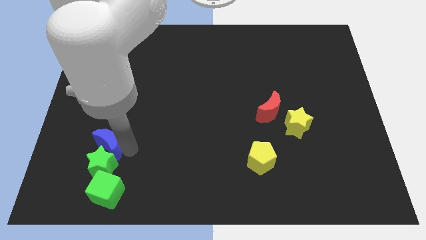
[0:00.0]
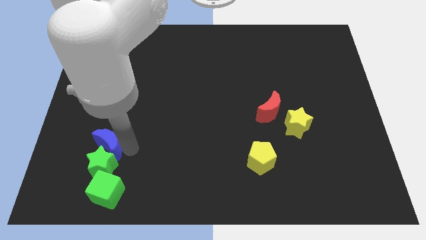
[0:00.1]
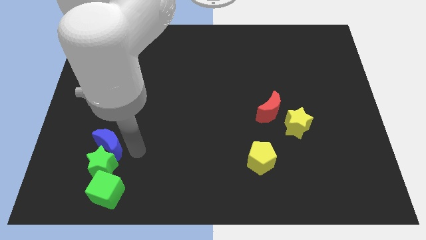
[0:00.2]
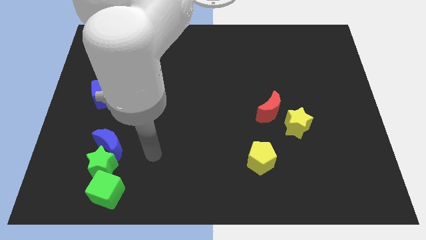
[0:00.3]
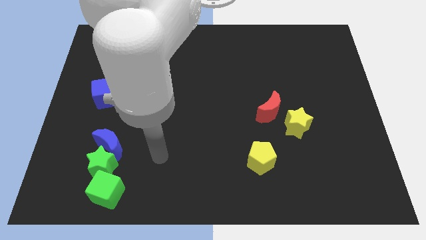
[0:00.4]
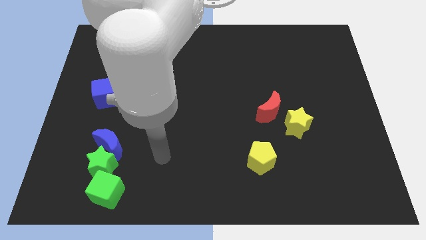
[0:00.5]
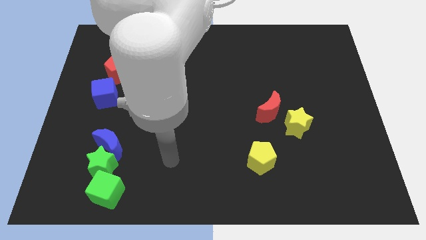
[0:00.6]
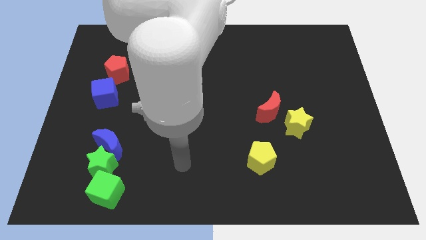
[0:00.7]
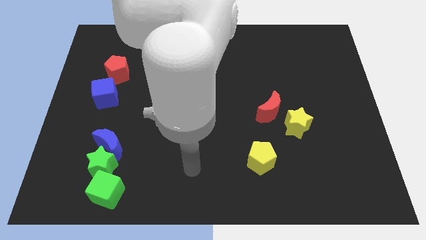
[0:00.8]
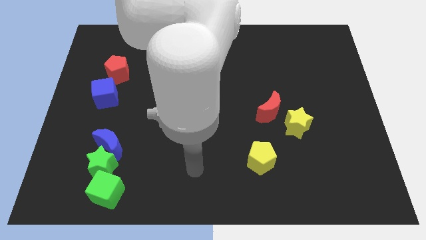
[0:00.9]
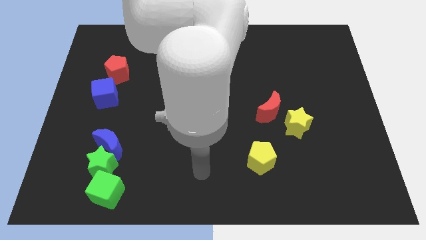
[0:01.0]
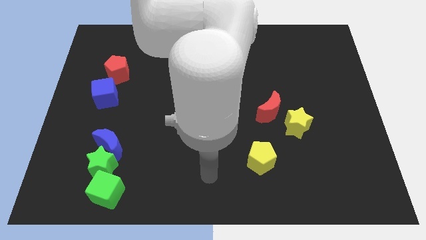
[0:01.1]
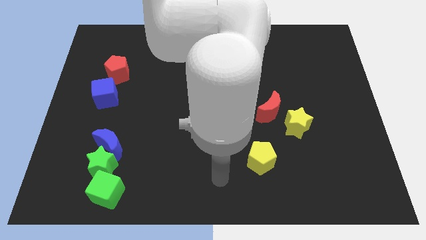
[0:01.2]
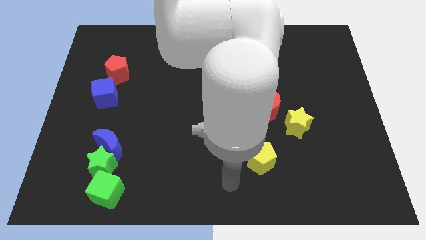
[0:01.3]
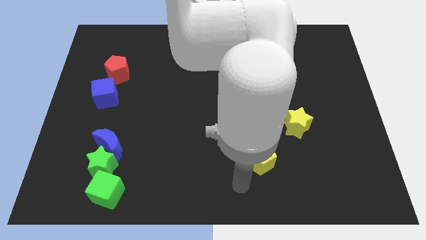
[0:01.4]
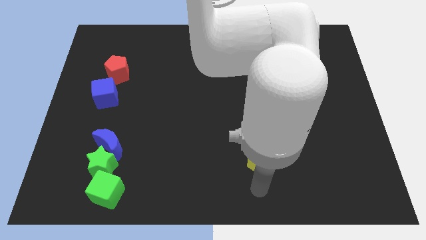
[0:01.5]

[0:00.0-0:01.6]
point your arm at the bottom of yellow pentagon

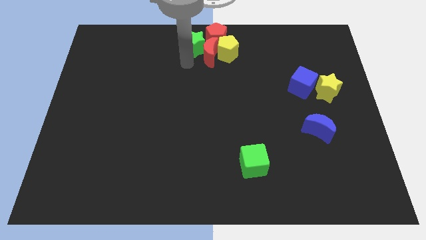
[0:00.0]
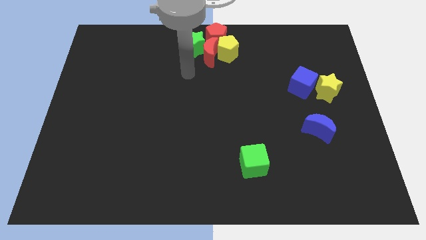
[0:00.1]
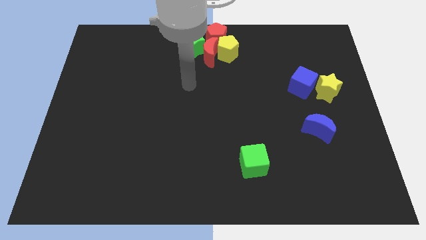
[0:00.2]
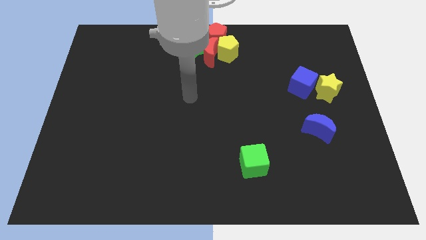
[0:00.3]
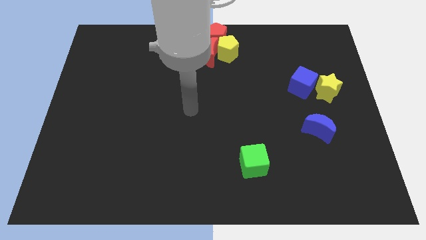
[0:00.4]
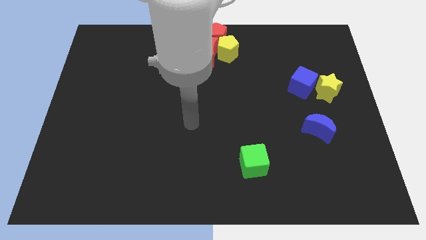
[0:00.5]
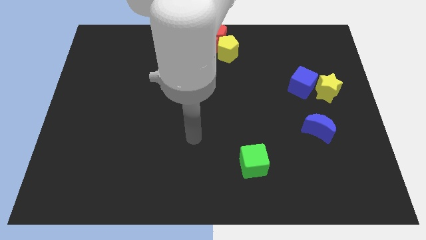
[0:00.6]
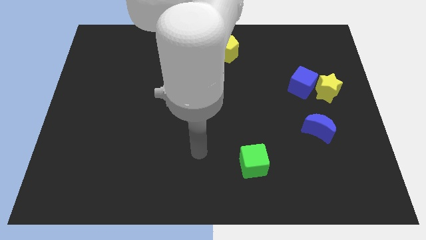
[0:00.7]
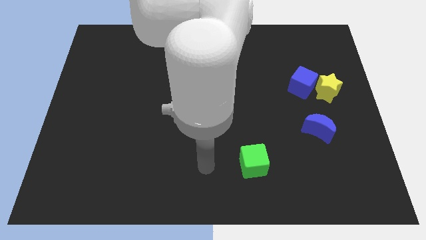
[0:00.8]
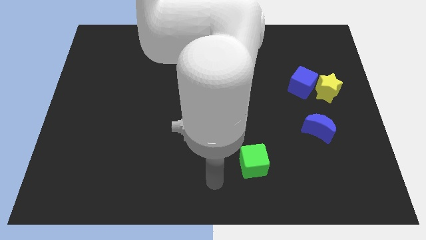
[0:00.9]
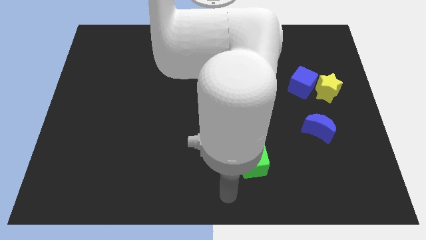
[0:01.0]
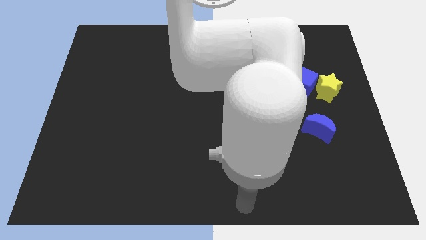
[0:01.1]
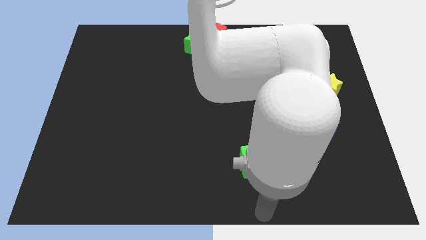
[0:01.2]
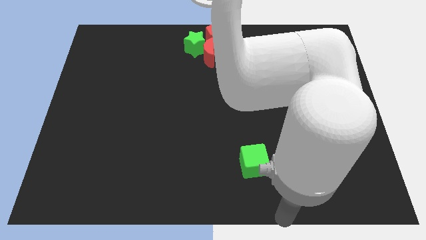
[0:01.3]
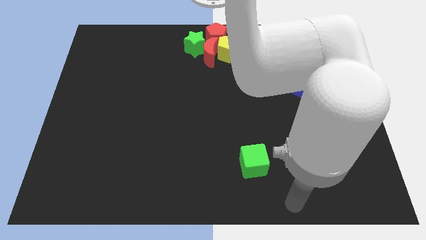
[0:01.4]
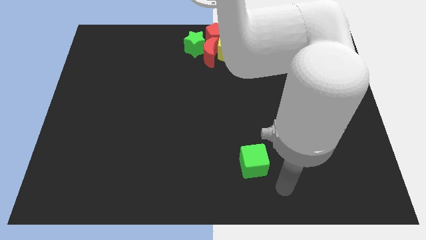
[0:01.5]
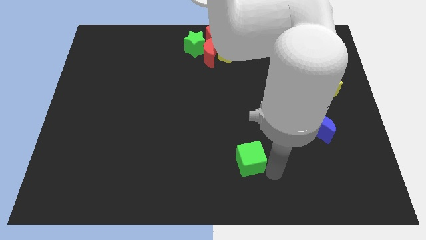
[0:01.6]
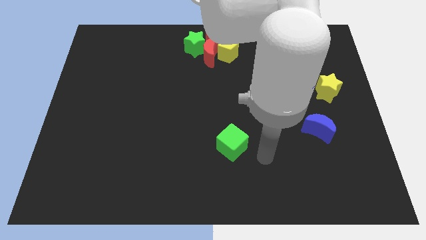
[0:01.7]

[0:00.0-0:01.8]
tap the bottom right side of the green cube

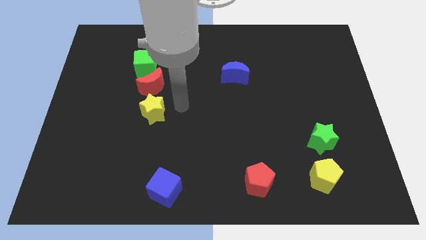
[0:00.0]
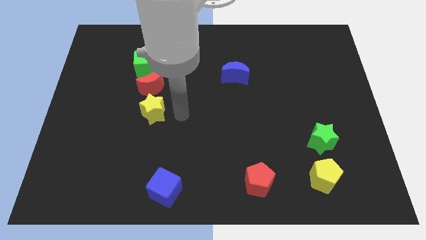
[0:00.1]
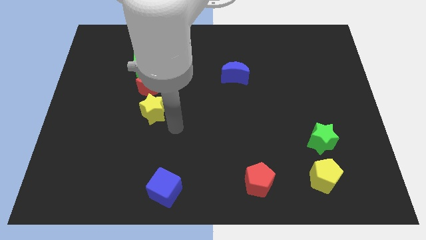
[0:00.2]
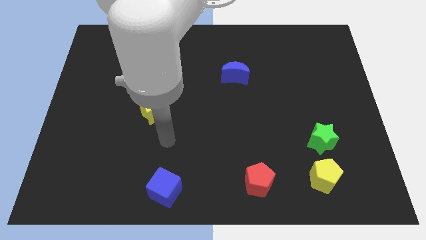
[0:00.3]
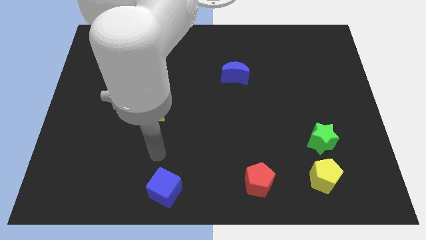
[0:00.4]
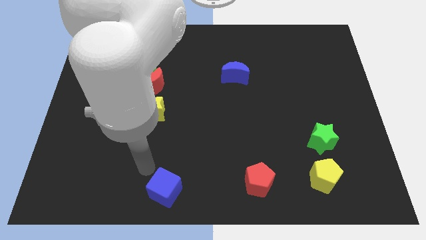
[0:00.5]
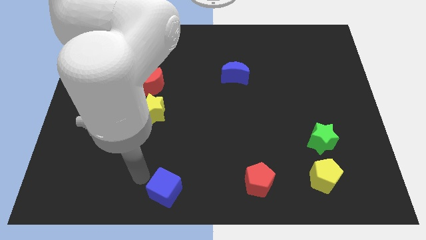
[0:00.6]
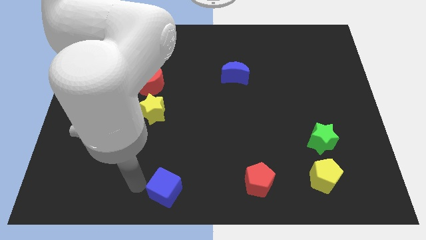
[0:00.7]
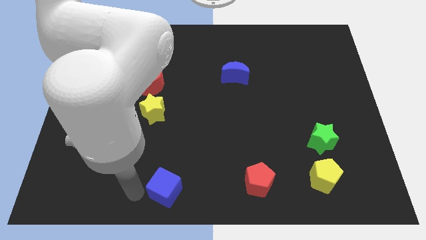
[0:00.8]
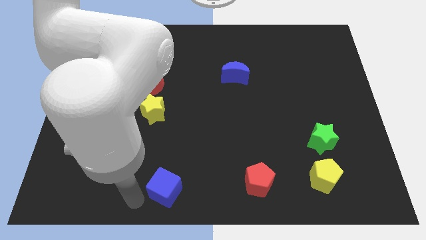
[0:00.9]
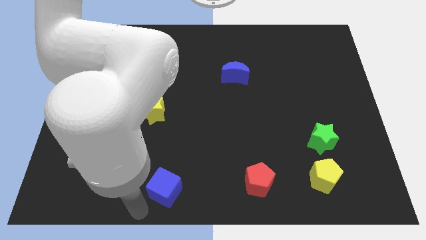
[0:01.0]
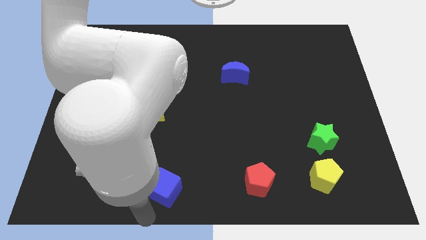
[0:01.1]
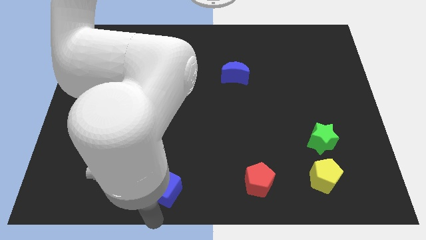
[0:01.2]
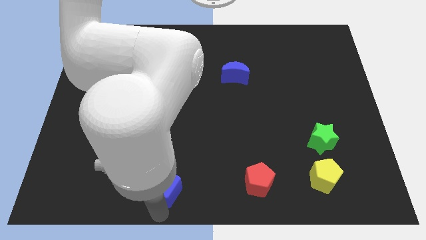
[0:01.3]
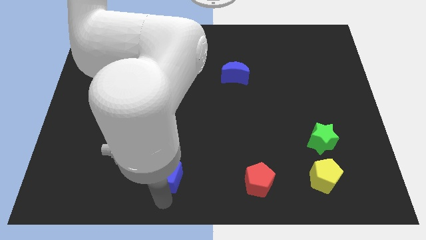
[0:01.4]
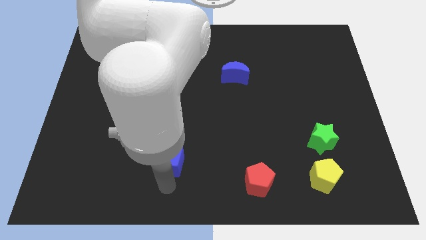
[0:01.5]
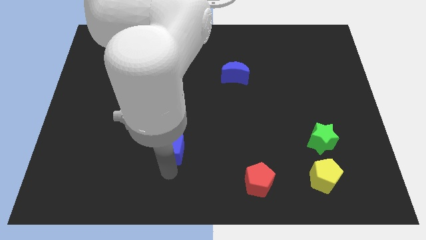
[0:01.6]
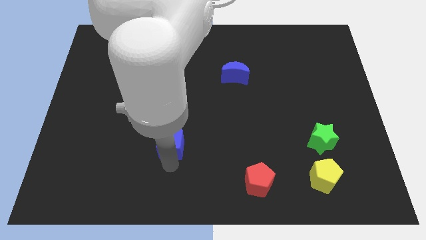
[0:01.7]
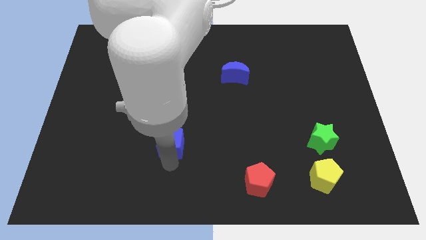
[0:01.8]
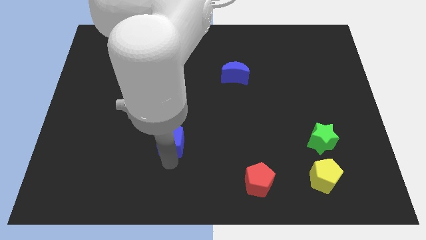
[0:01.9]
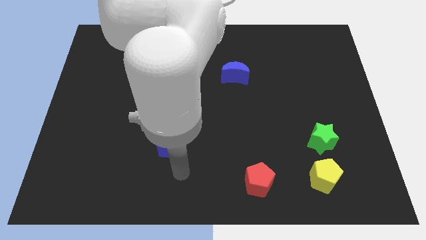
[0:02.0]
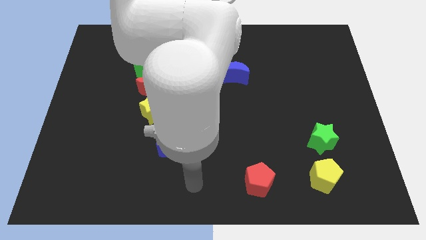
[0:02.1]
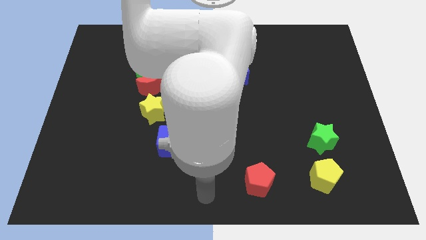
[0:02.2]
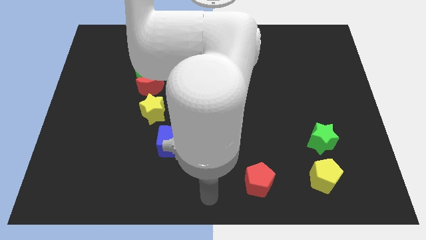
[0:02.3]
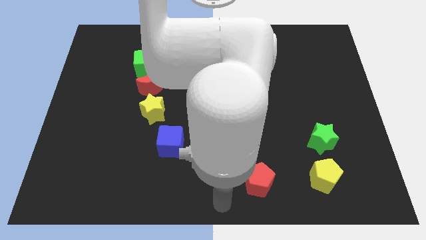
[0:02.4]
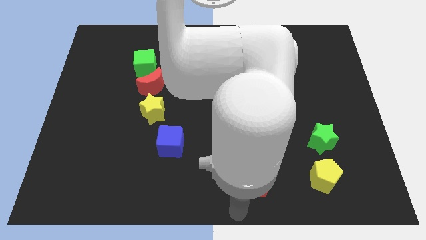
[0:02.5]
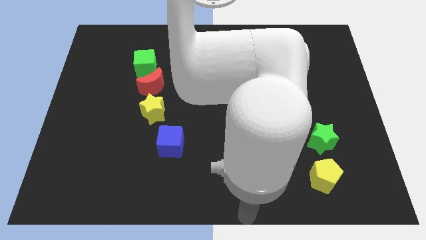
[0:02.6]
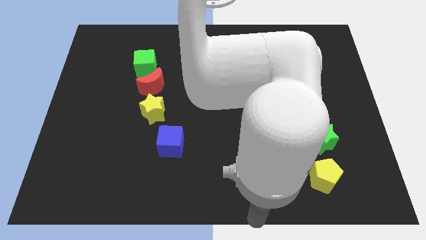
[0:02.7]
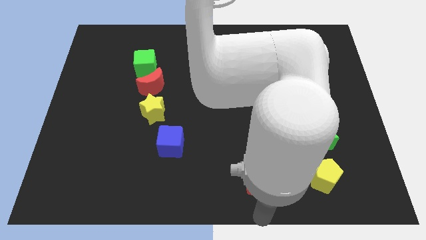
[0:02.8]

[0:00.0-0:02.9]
move the blue cube at the bottom of the yellow star

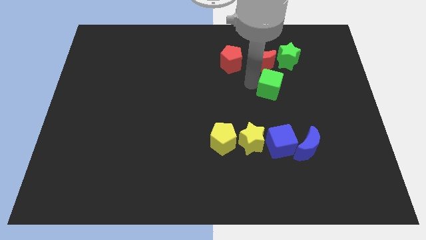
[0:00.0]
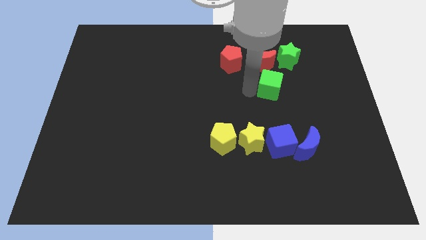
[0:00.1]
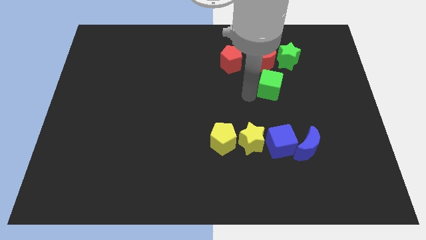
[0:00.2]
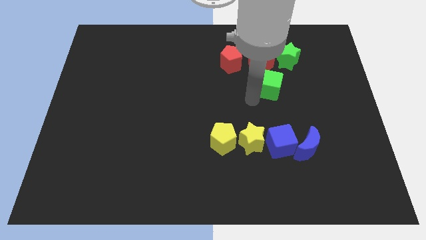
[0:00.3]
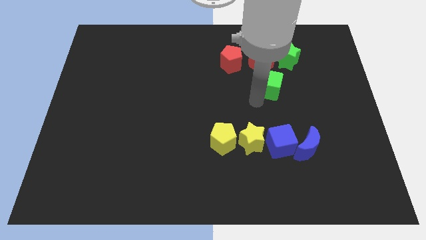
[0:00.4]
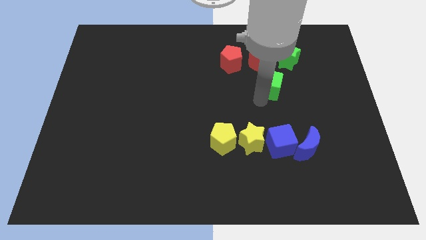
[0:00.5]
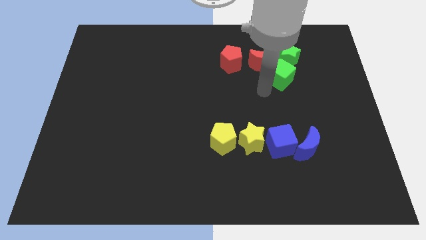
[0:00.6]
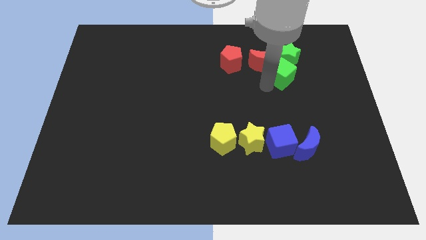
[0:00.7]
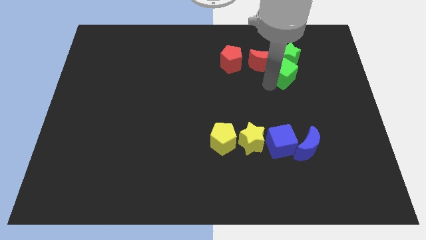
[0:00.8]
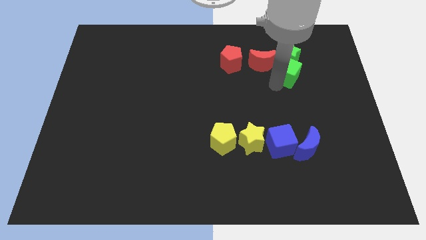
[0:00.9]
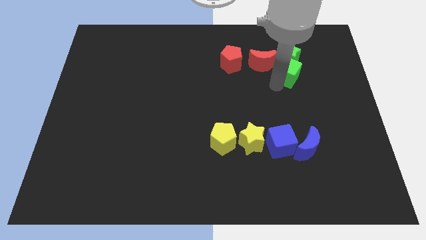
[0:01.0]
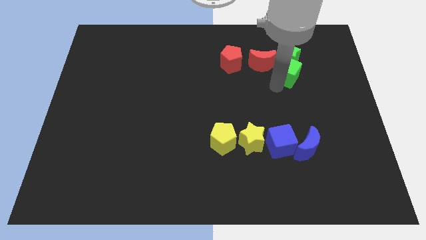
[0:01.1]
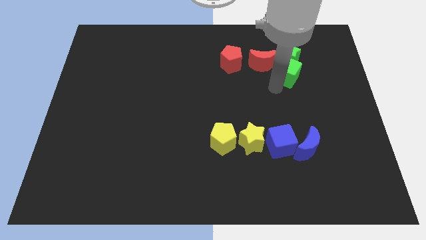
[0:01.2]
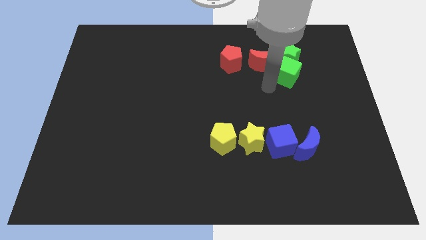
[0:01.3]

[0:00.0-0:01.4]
push the green cube towards the green star

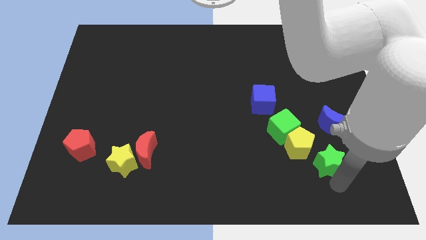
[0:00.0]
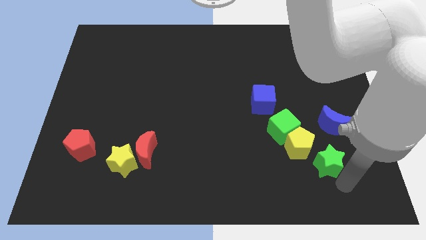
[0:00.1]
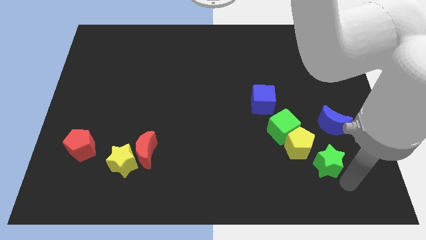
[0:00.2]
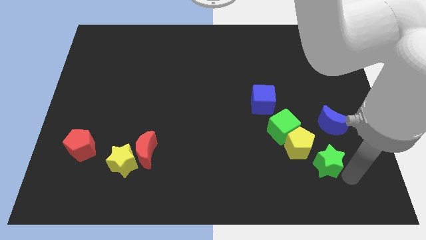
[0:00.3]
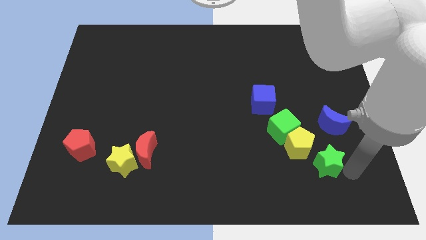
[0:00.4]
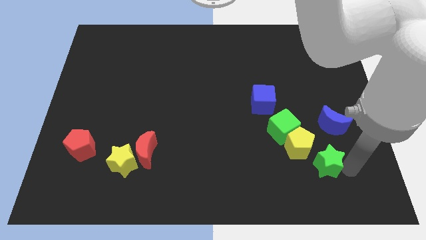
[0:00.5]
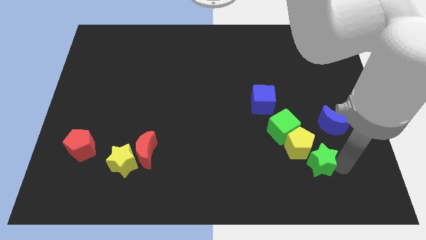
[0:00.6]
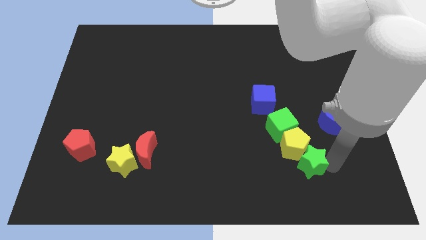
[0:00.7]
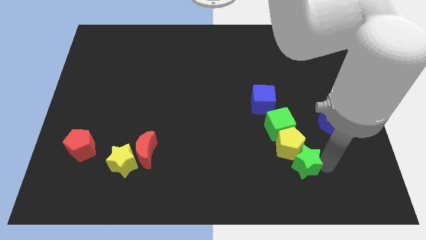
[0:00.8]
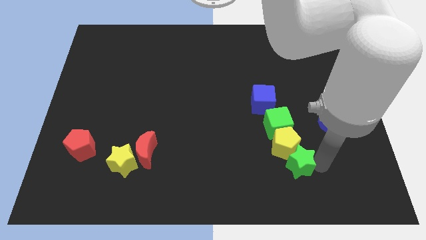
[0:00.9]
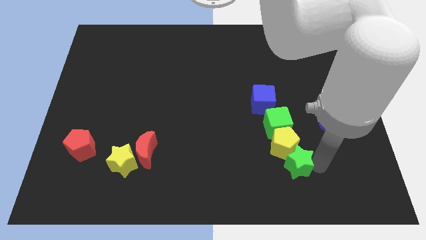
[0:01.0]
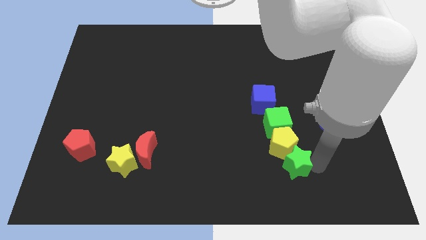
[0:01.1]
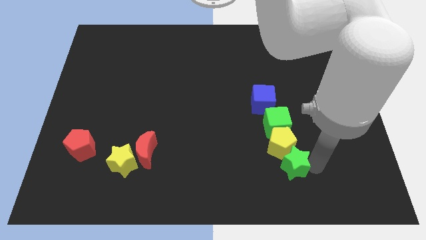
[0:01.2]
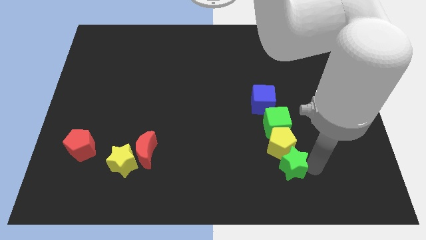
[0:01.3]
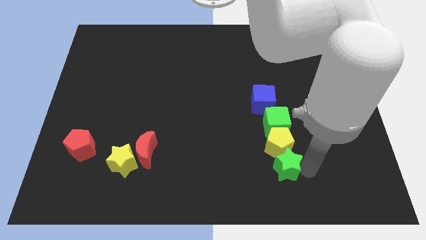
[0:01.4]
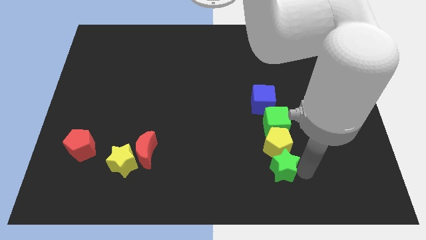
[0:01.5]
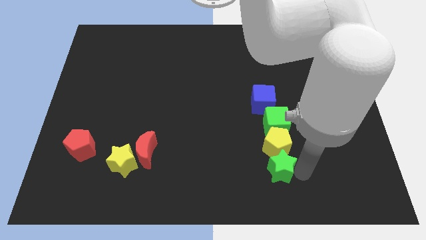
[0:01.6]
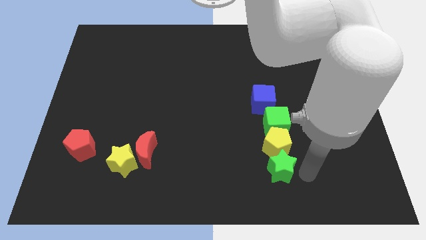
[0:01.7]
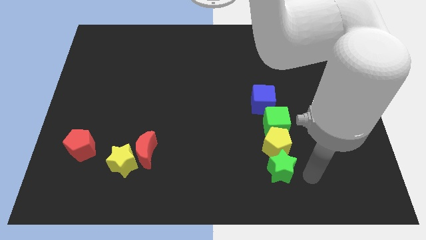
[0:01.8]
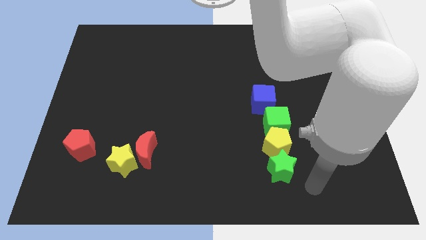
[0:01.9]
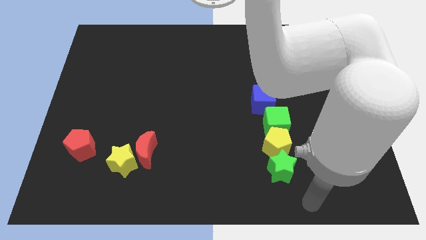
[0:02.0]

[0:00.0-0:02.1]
place green star to the bottom of yellow pentagon
